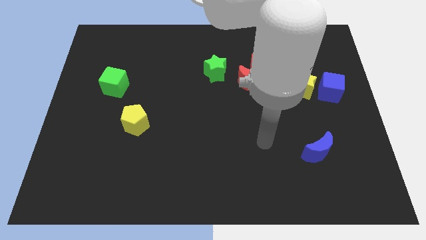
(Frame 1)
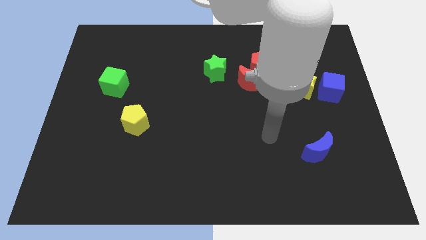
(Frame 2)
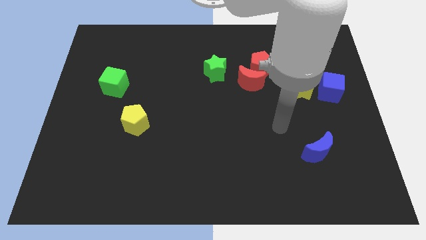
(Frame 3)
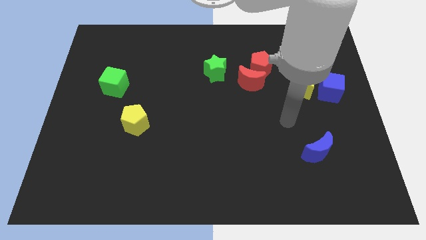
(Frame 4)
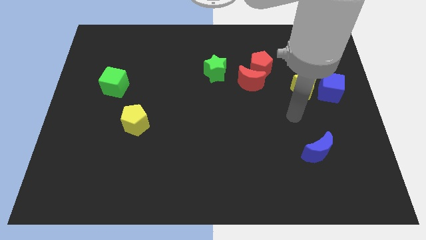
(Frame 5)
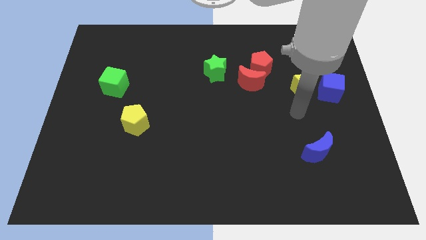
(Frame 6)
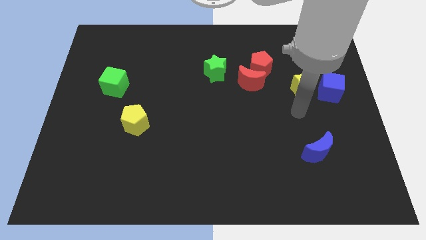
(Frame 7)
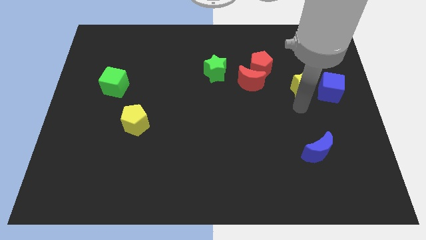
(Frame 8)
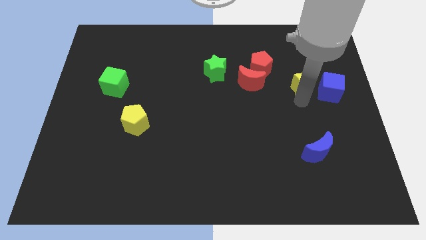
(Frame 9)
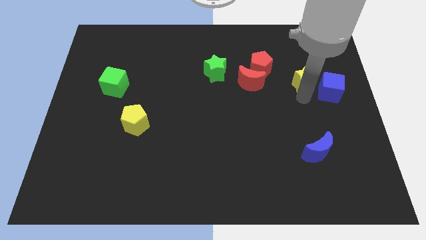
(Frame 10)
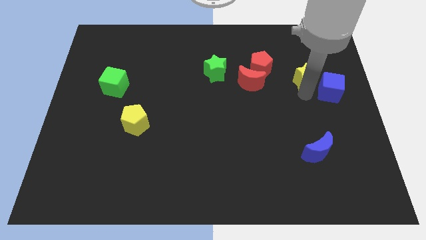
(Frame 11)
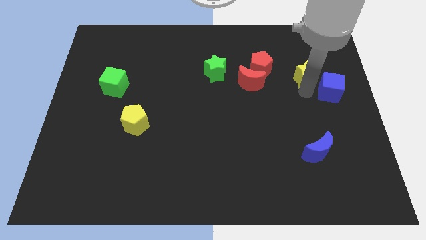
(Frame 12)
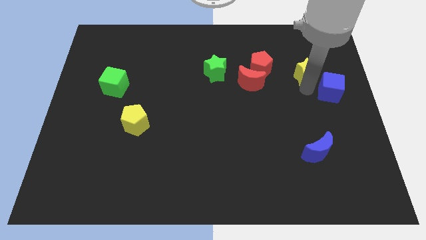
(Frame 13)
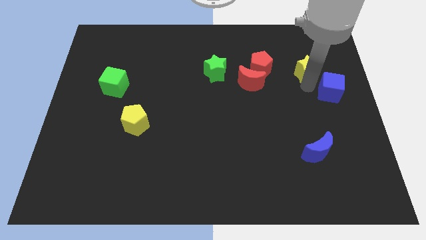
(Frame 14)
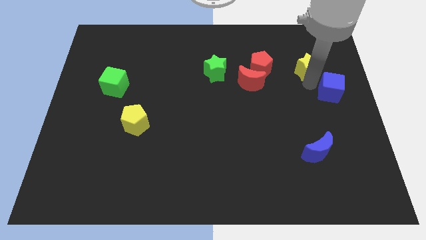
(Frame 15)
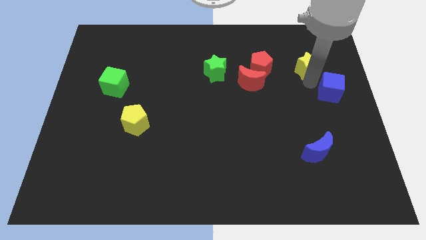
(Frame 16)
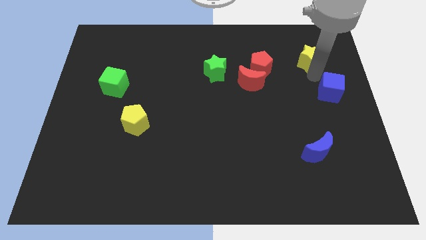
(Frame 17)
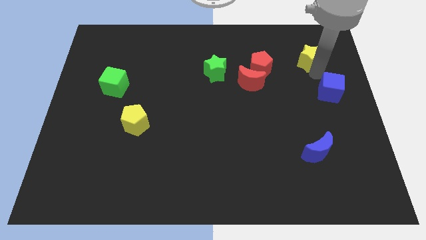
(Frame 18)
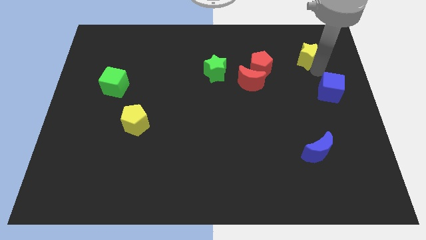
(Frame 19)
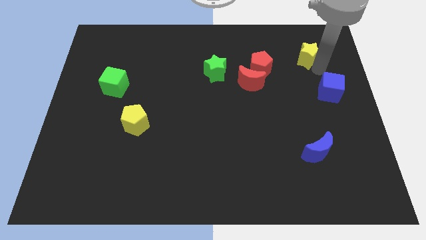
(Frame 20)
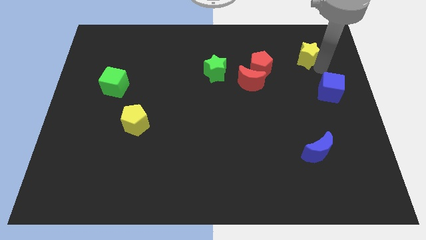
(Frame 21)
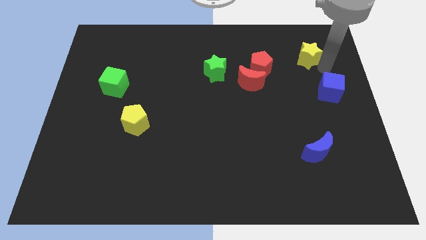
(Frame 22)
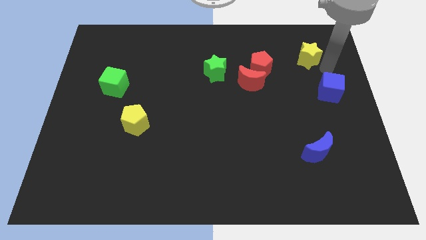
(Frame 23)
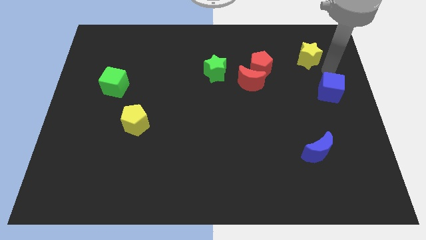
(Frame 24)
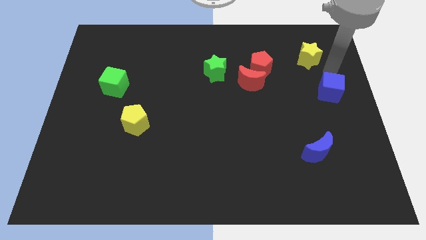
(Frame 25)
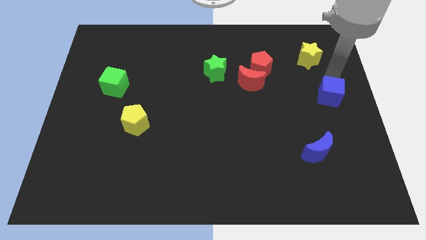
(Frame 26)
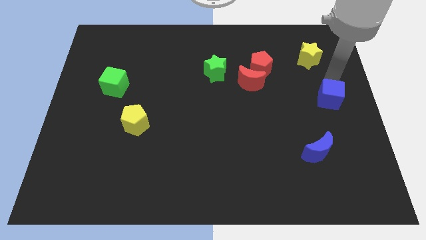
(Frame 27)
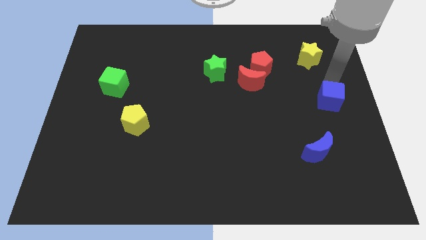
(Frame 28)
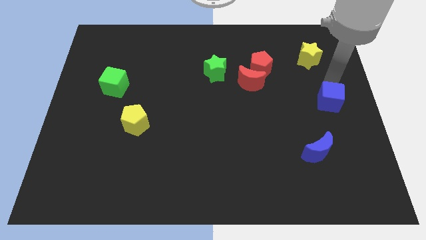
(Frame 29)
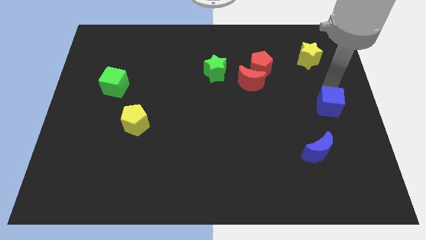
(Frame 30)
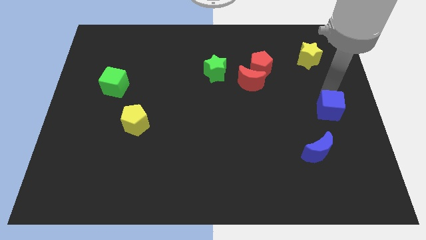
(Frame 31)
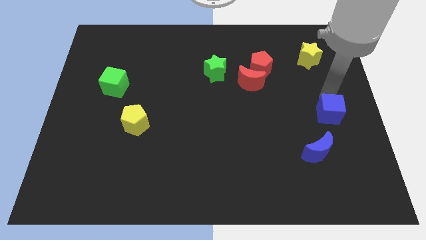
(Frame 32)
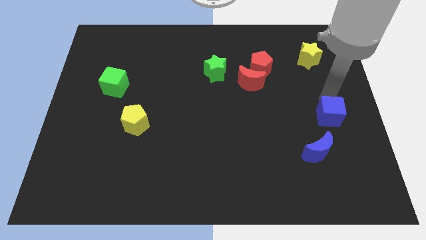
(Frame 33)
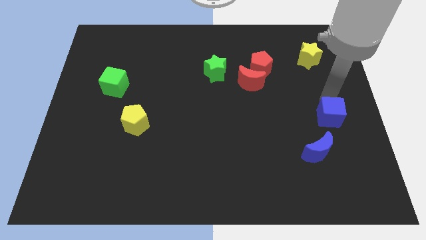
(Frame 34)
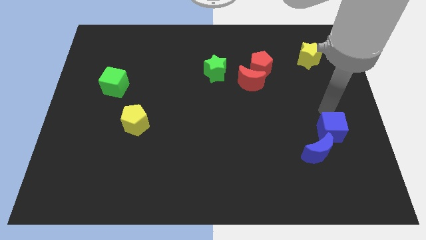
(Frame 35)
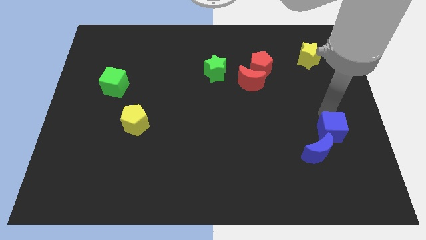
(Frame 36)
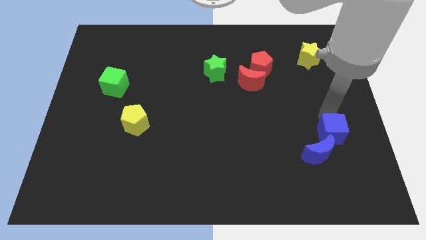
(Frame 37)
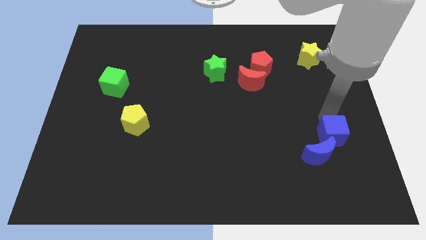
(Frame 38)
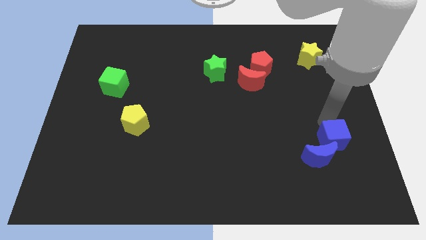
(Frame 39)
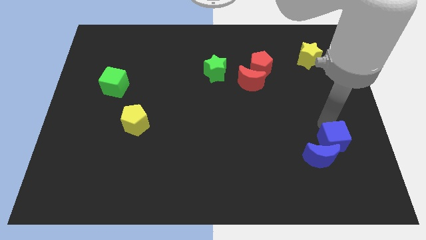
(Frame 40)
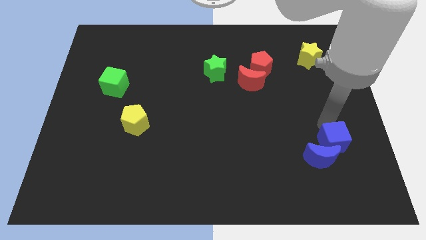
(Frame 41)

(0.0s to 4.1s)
slide the blue cube towards the blue moon

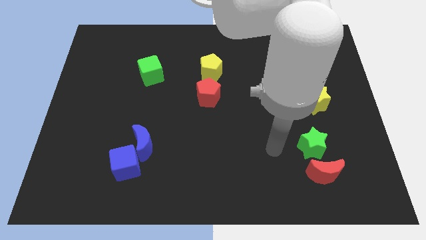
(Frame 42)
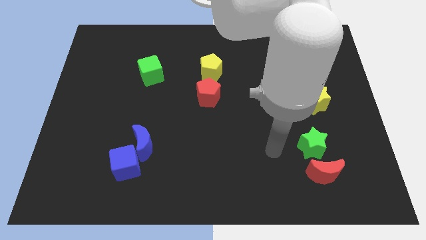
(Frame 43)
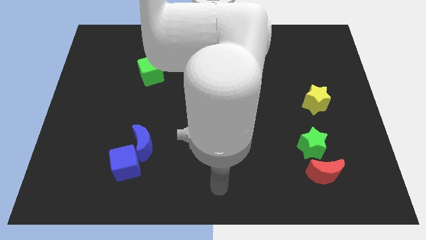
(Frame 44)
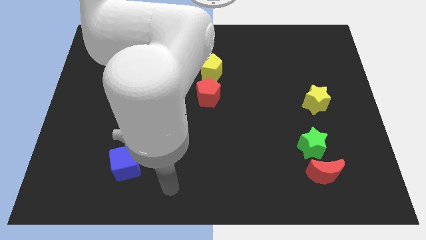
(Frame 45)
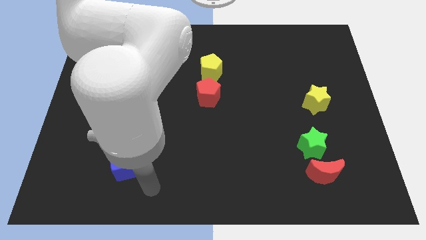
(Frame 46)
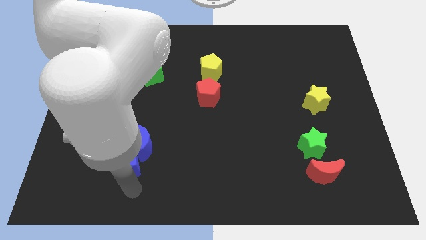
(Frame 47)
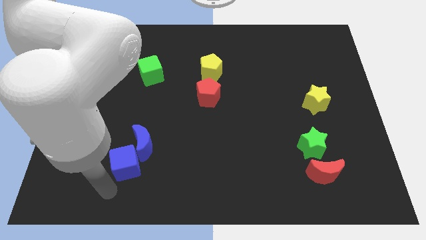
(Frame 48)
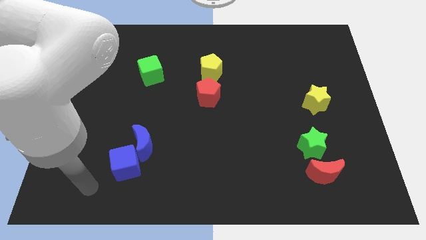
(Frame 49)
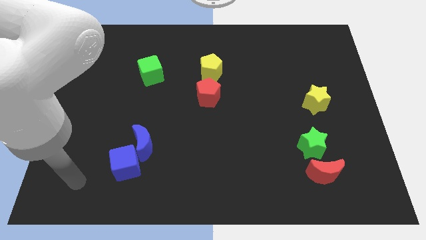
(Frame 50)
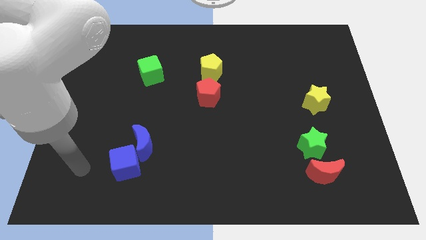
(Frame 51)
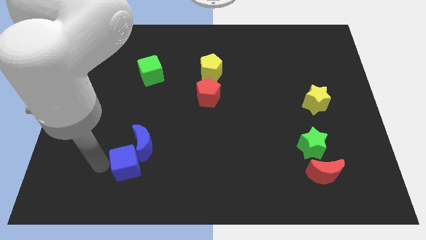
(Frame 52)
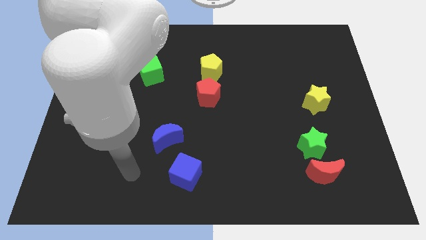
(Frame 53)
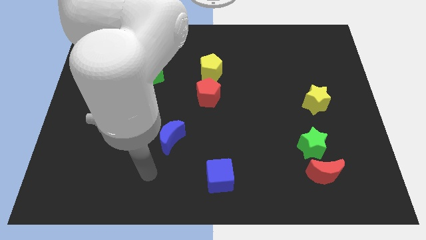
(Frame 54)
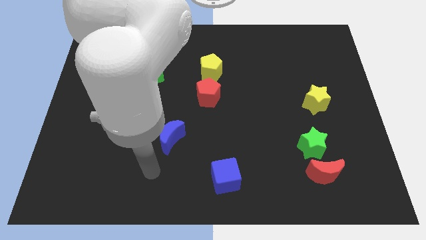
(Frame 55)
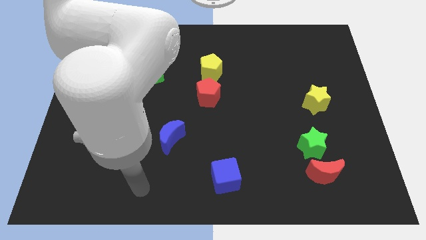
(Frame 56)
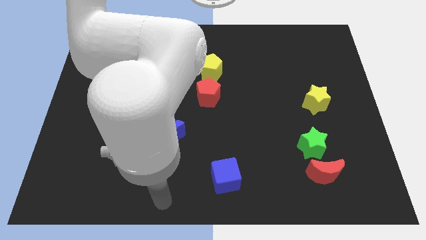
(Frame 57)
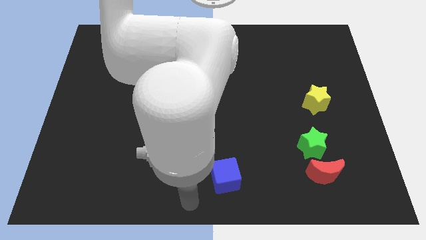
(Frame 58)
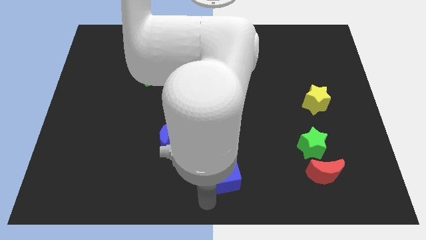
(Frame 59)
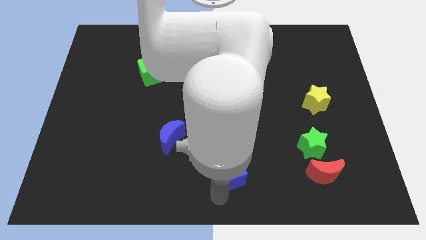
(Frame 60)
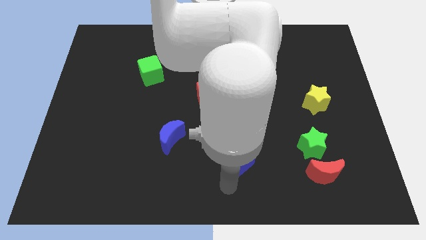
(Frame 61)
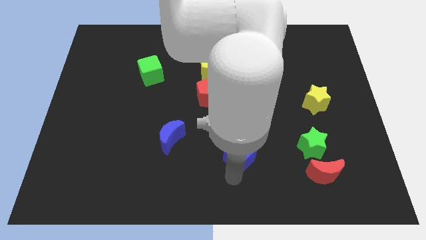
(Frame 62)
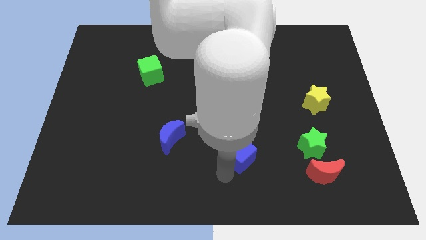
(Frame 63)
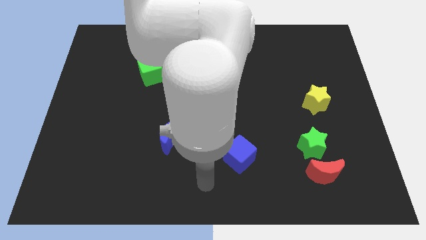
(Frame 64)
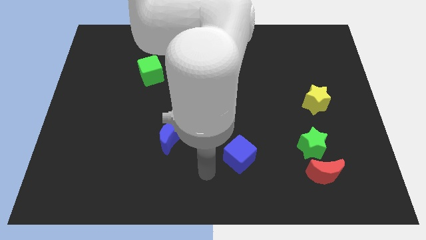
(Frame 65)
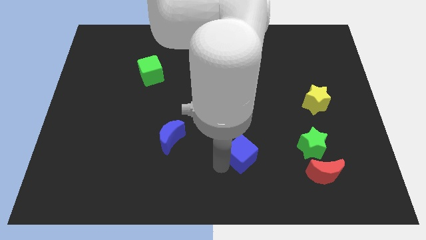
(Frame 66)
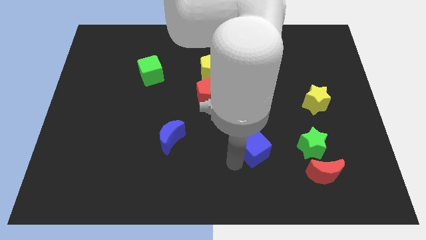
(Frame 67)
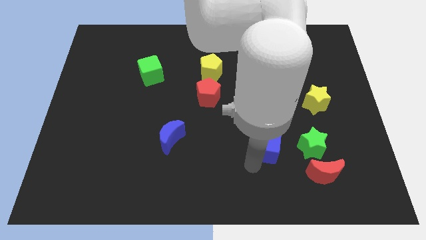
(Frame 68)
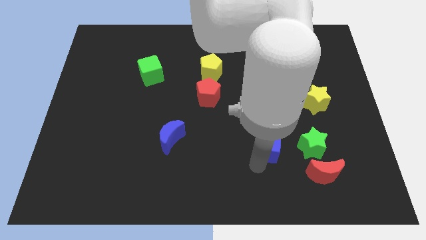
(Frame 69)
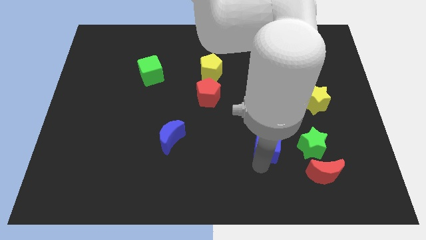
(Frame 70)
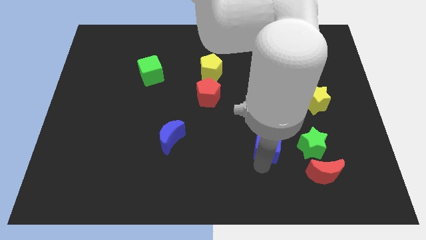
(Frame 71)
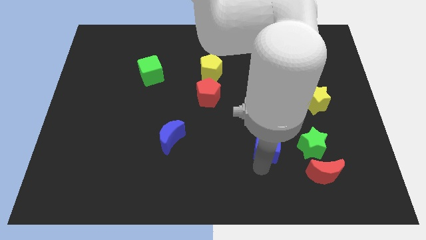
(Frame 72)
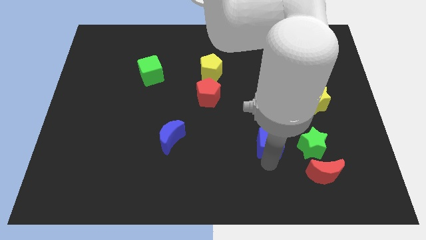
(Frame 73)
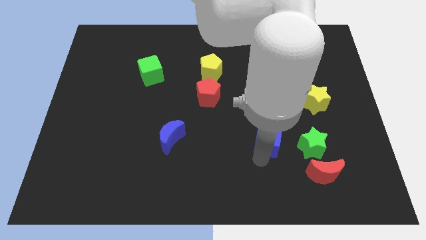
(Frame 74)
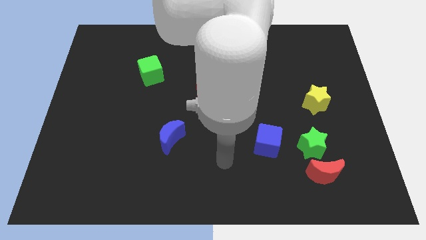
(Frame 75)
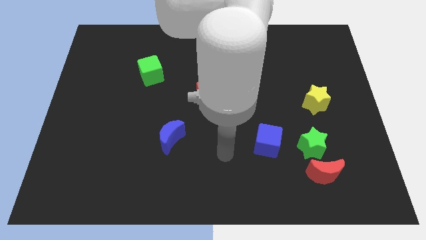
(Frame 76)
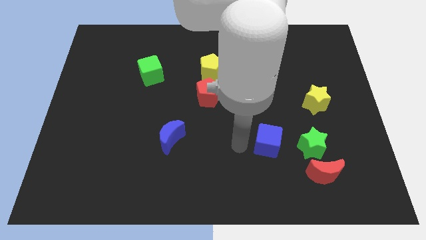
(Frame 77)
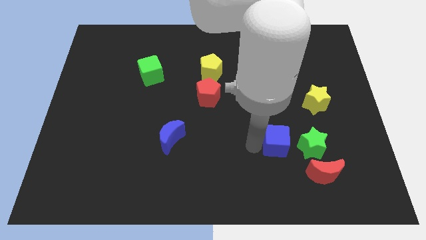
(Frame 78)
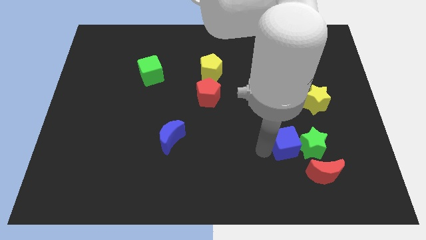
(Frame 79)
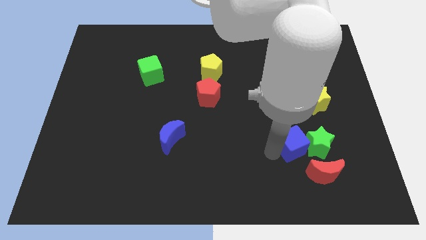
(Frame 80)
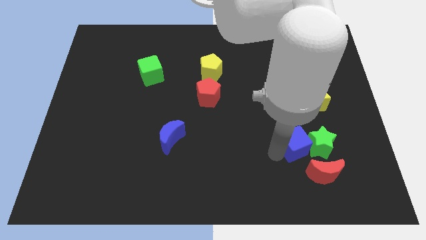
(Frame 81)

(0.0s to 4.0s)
slide the blue cube to the green star

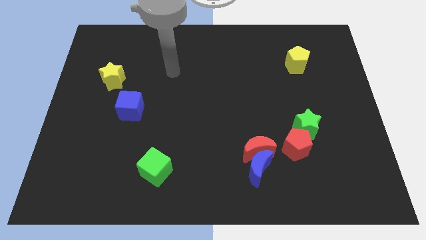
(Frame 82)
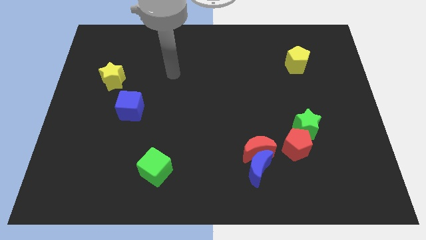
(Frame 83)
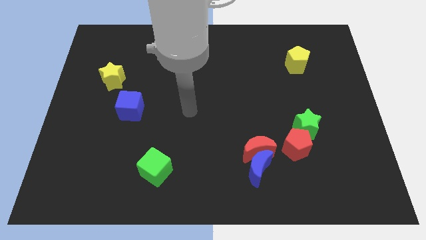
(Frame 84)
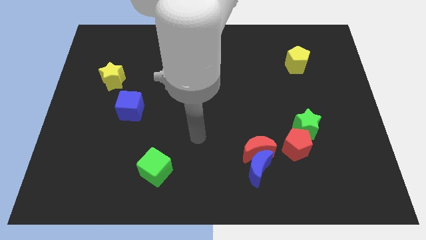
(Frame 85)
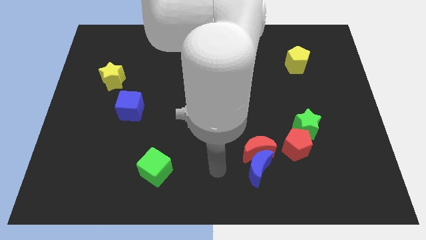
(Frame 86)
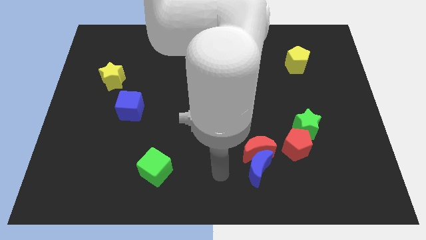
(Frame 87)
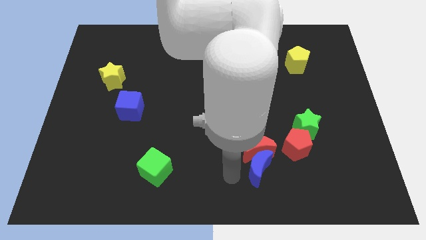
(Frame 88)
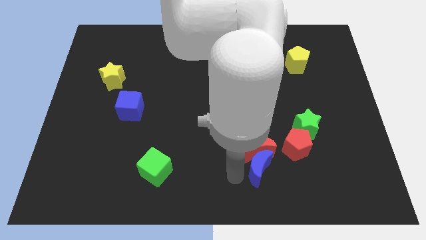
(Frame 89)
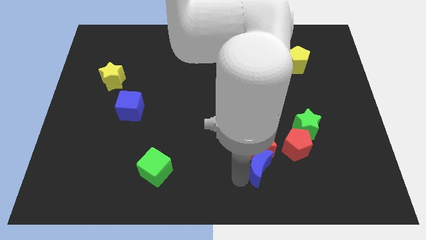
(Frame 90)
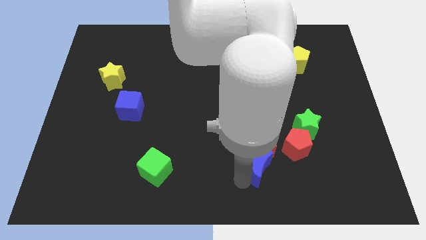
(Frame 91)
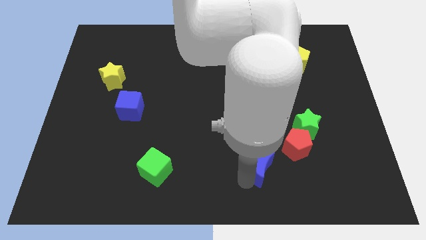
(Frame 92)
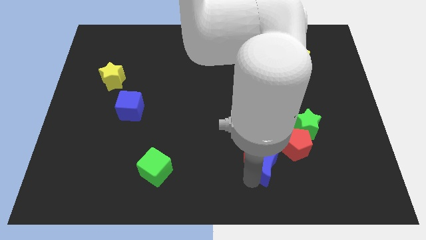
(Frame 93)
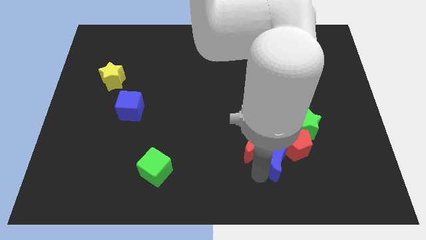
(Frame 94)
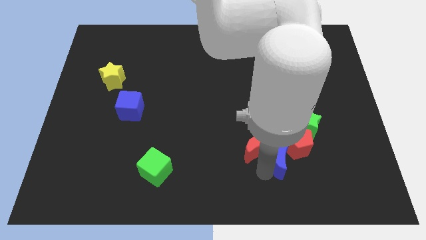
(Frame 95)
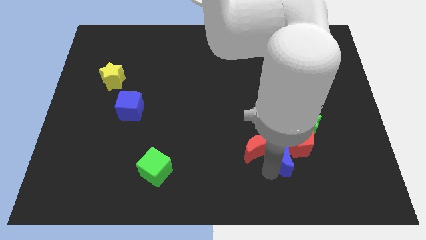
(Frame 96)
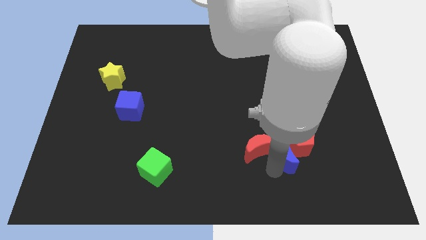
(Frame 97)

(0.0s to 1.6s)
push the blue moon towards the red pentagon
